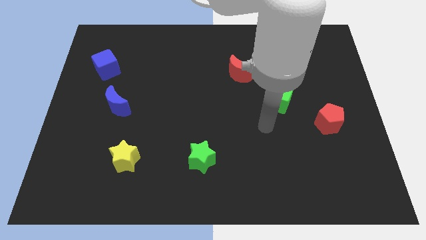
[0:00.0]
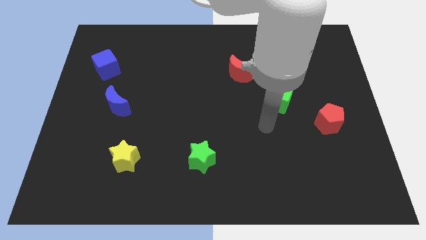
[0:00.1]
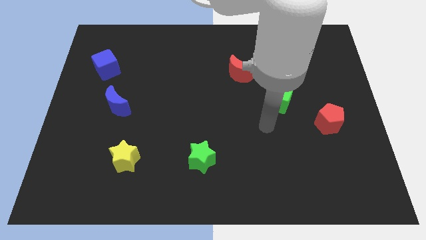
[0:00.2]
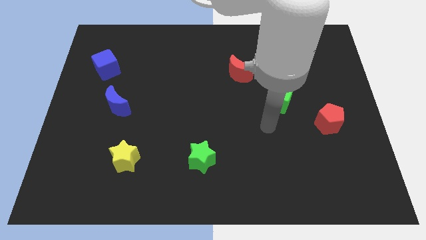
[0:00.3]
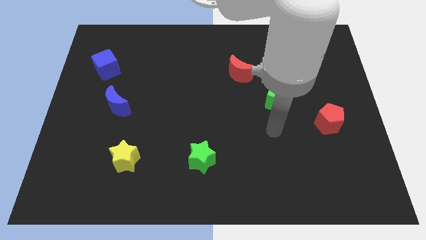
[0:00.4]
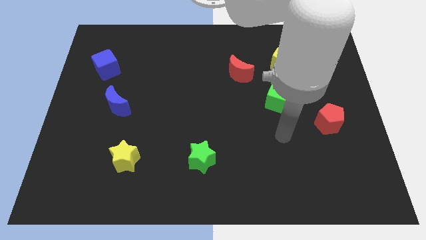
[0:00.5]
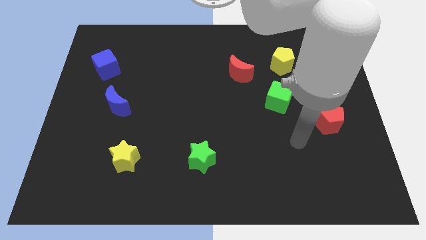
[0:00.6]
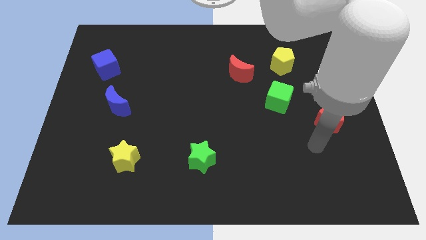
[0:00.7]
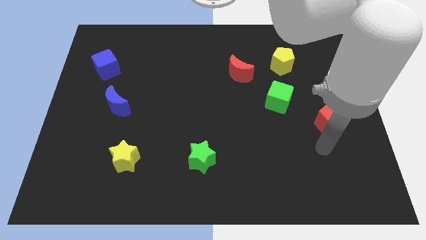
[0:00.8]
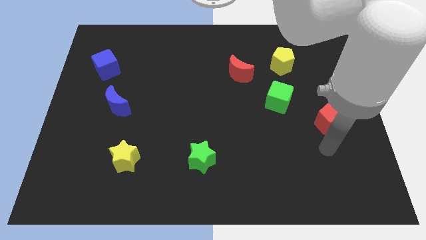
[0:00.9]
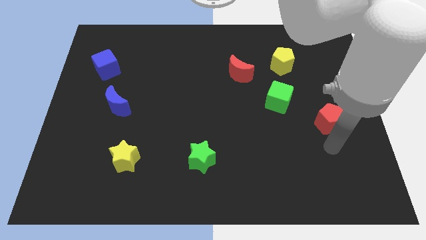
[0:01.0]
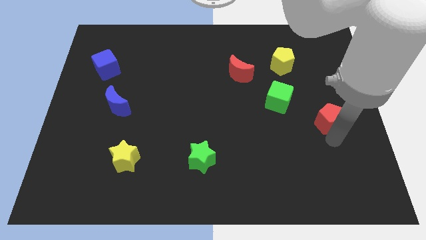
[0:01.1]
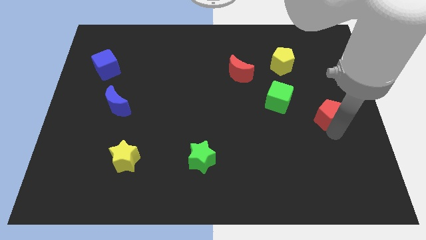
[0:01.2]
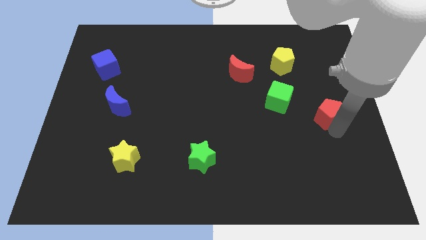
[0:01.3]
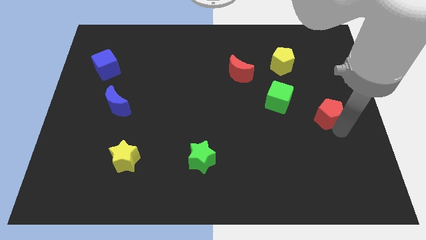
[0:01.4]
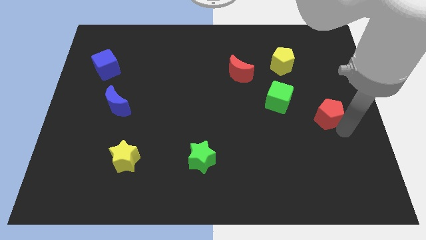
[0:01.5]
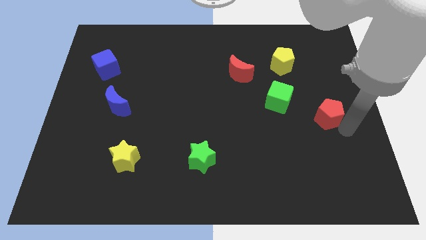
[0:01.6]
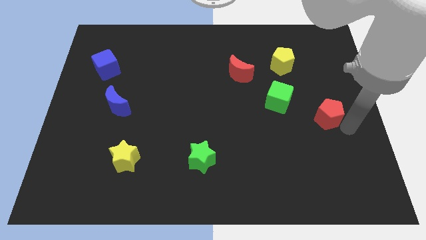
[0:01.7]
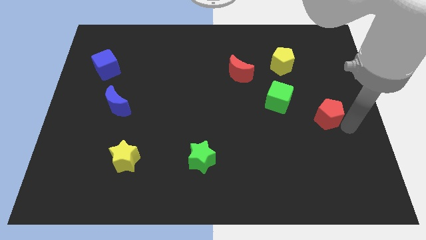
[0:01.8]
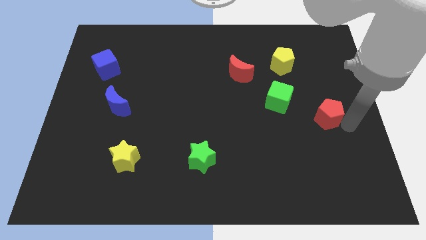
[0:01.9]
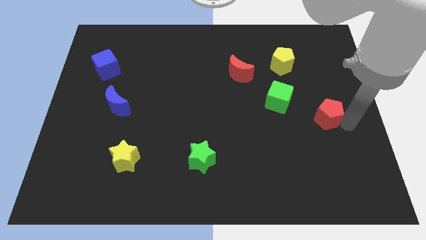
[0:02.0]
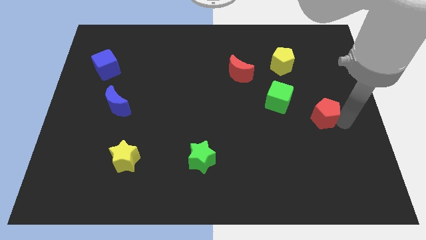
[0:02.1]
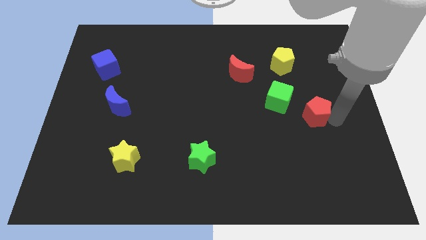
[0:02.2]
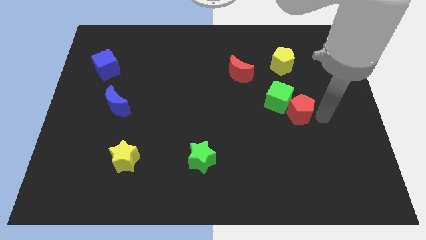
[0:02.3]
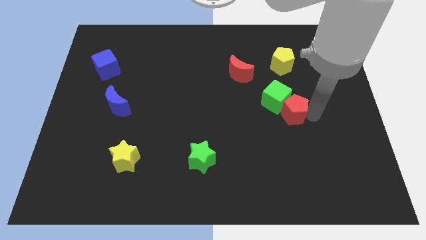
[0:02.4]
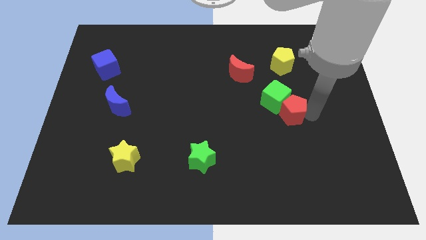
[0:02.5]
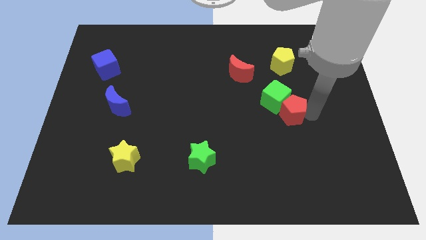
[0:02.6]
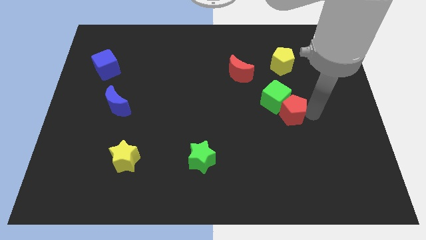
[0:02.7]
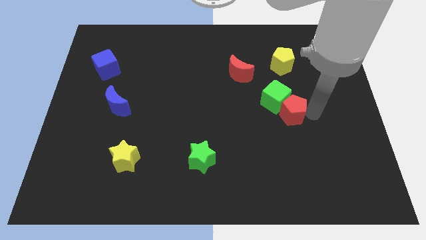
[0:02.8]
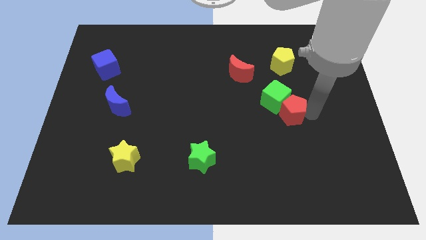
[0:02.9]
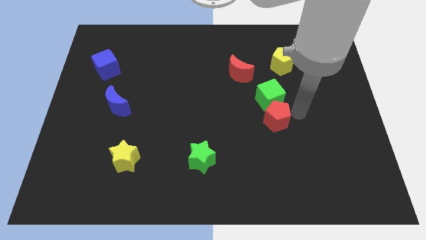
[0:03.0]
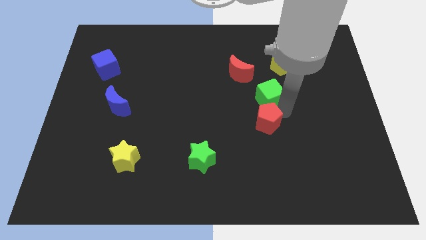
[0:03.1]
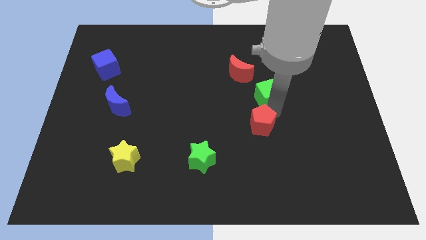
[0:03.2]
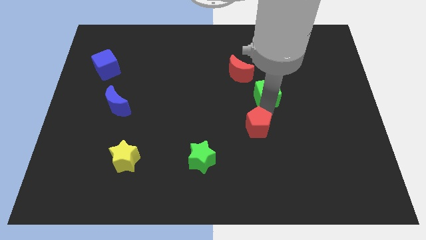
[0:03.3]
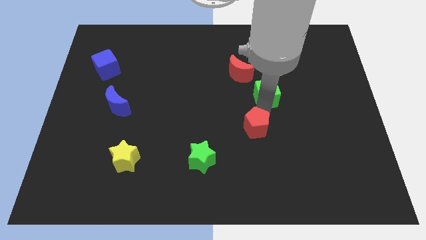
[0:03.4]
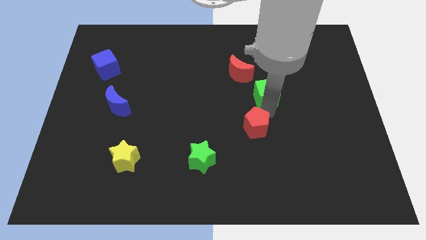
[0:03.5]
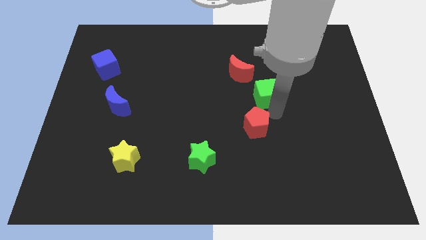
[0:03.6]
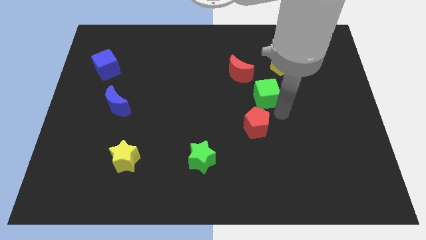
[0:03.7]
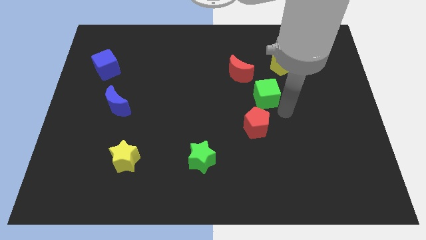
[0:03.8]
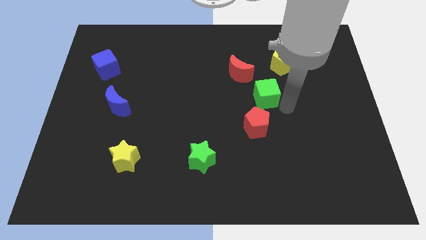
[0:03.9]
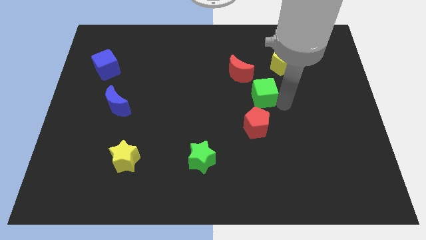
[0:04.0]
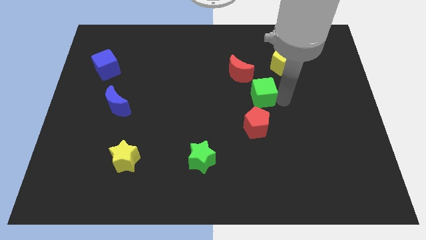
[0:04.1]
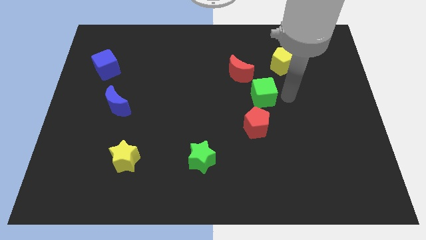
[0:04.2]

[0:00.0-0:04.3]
place the red pentagon below the red crescent

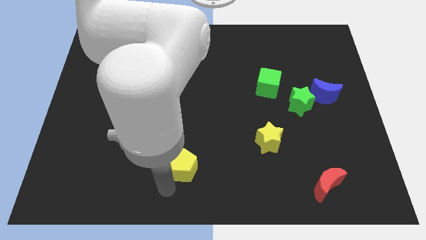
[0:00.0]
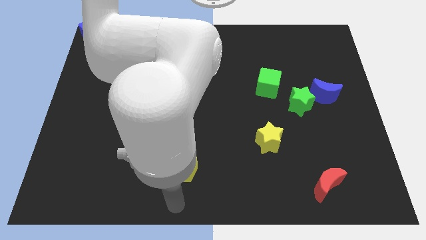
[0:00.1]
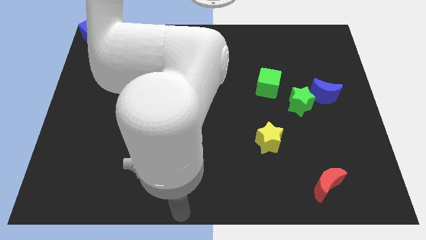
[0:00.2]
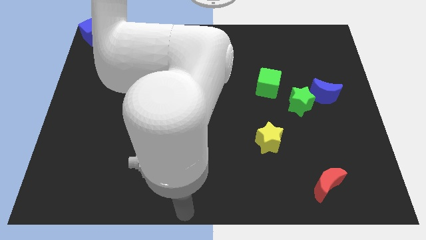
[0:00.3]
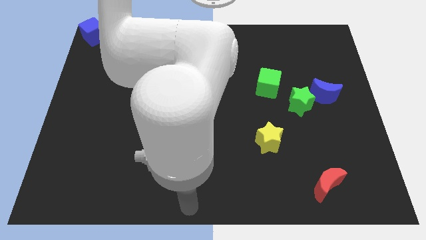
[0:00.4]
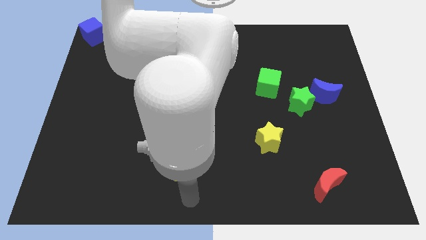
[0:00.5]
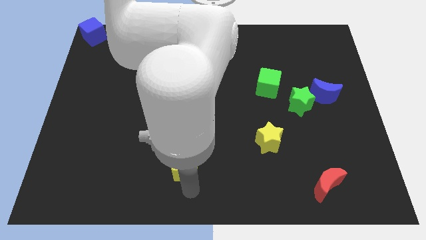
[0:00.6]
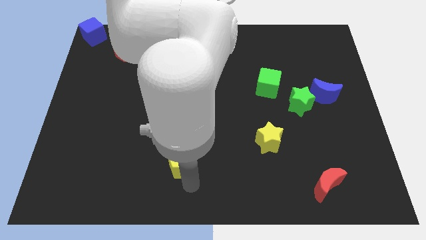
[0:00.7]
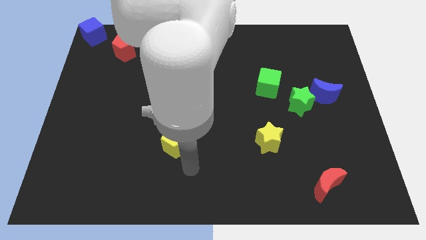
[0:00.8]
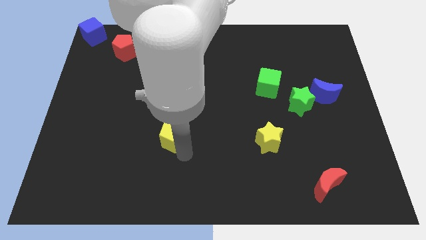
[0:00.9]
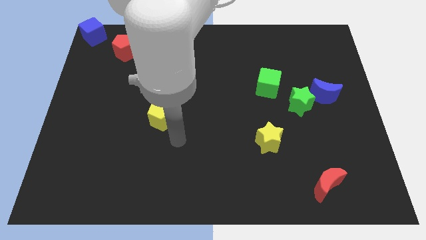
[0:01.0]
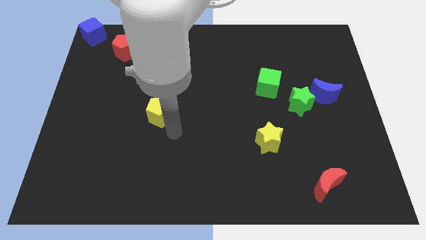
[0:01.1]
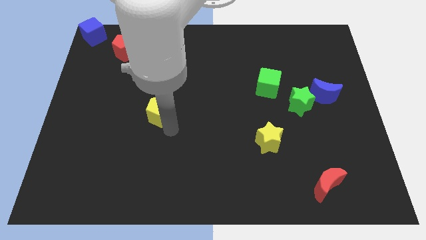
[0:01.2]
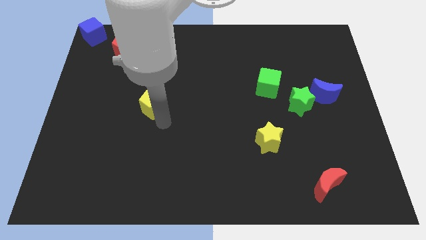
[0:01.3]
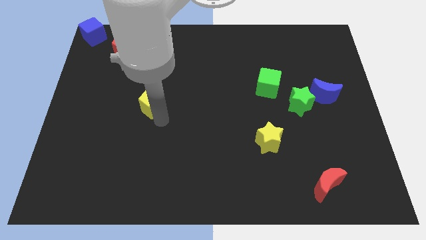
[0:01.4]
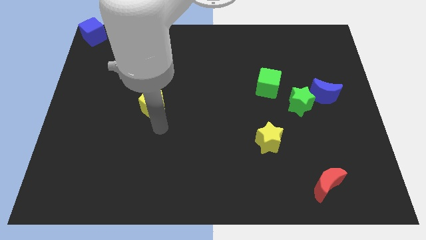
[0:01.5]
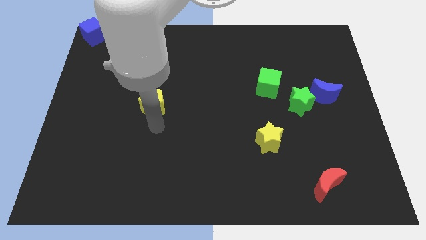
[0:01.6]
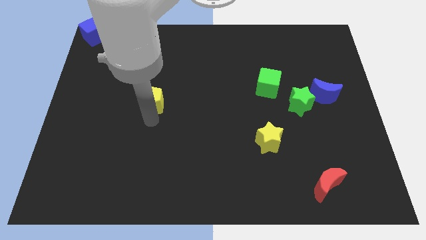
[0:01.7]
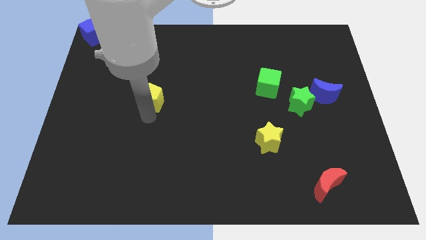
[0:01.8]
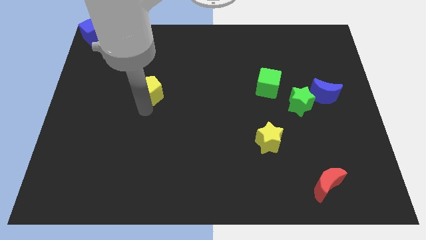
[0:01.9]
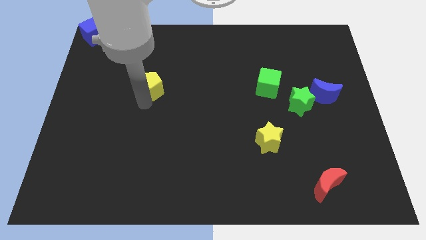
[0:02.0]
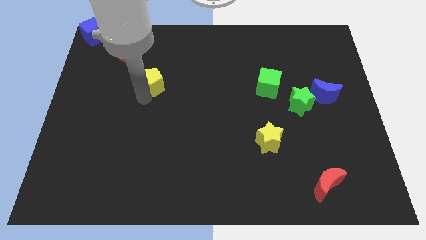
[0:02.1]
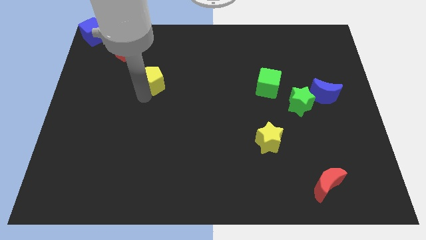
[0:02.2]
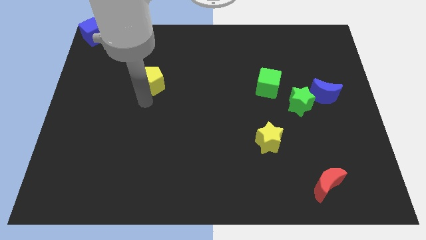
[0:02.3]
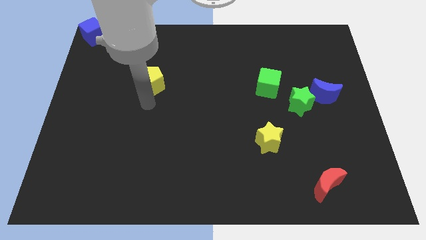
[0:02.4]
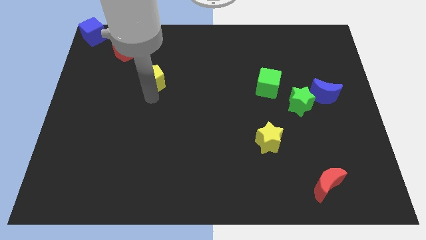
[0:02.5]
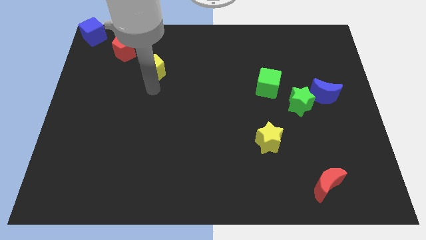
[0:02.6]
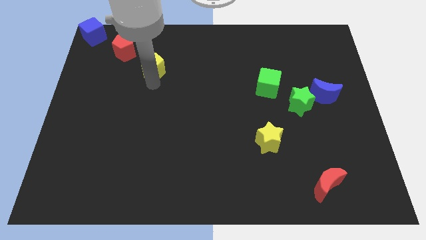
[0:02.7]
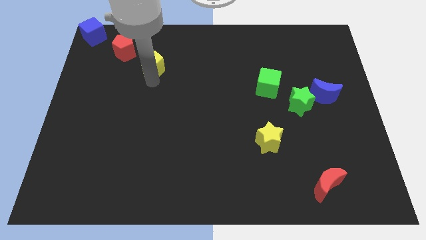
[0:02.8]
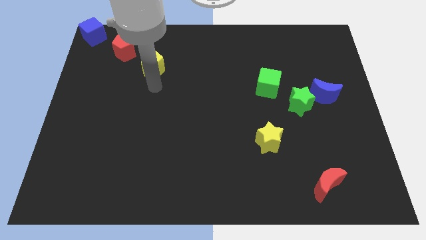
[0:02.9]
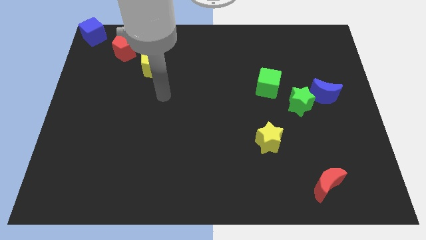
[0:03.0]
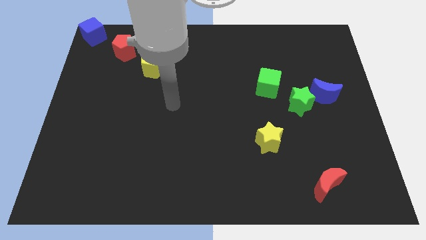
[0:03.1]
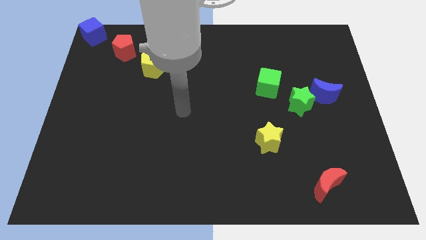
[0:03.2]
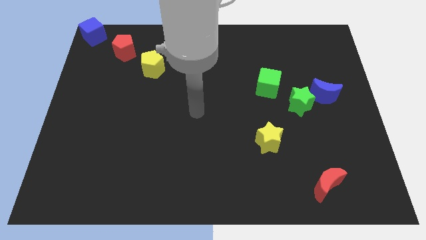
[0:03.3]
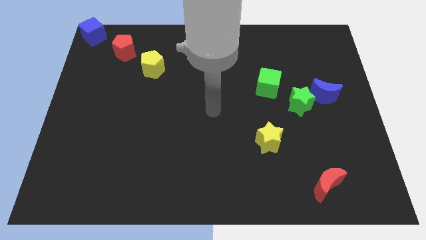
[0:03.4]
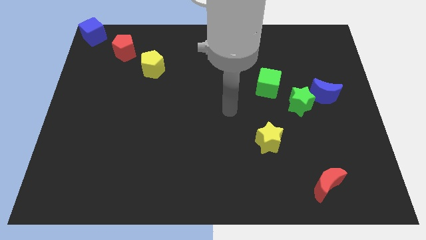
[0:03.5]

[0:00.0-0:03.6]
place the yellow pentagon to the bottom right of red pentagon

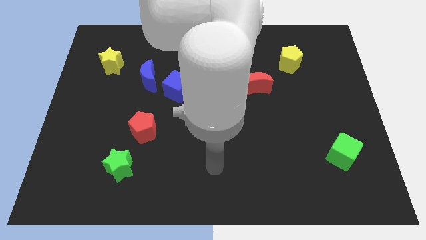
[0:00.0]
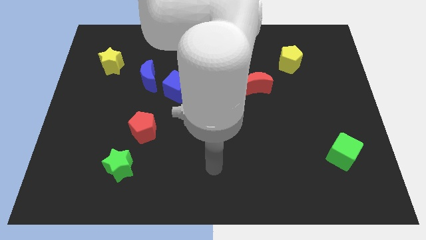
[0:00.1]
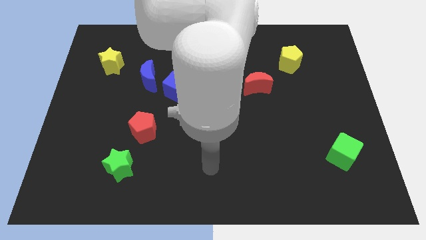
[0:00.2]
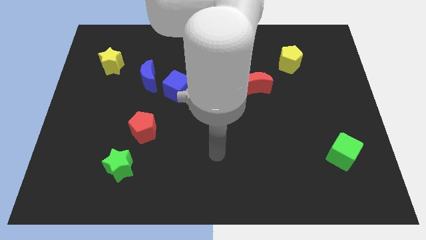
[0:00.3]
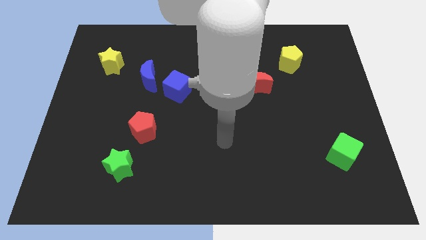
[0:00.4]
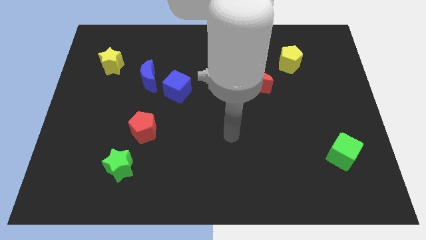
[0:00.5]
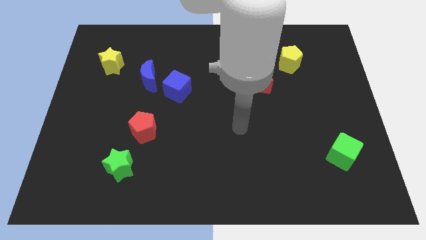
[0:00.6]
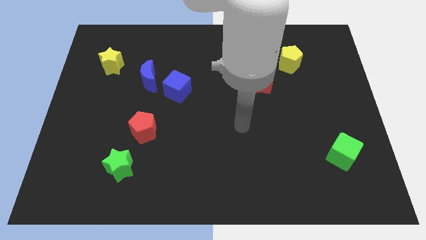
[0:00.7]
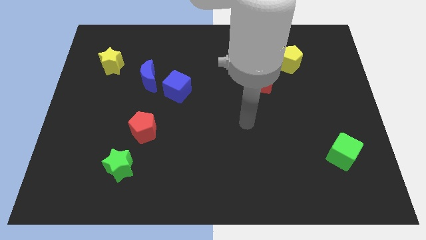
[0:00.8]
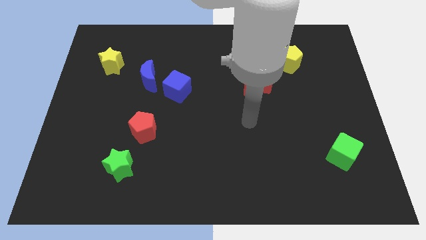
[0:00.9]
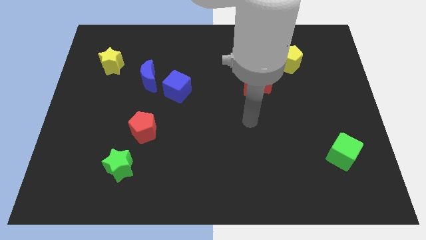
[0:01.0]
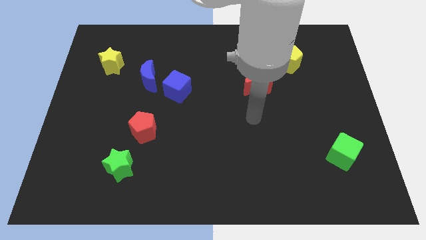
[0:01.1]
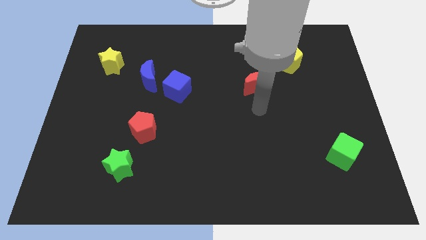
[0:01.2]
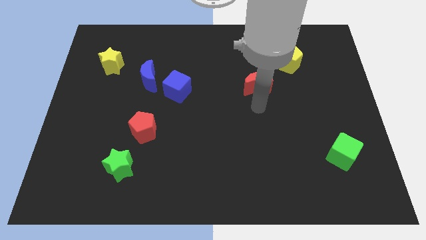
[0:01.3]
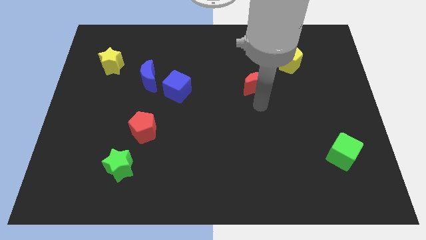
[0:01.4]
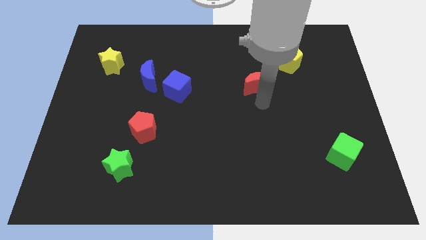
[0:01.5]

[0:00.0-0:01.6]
place your arm to the bottom side of the red moon
